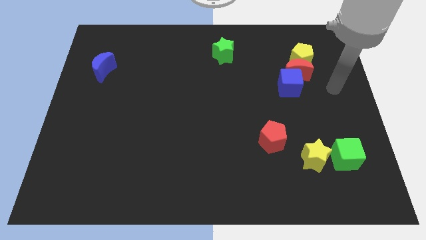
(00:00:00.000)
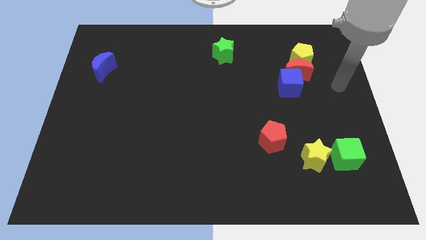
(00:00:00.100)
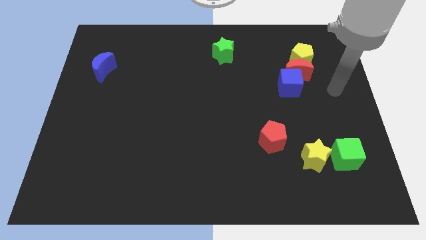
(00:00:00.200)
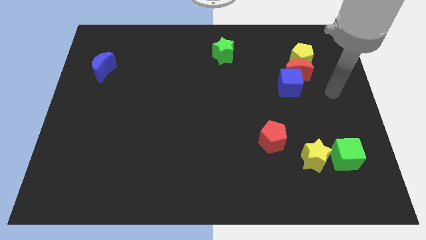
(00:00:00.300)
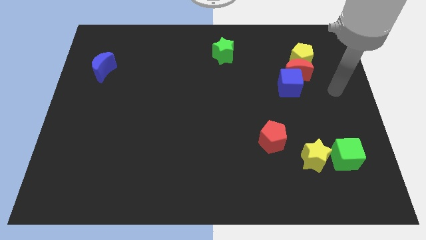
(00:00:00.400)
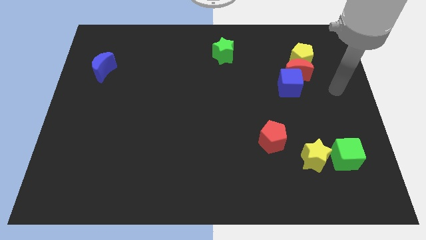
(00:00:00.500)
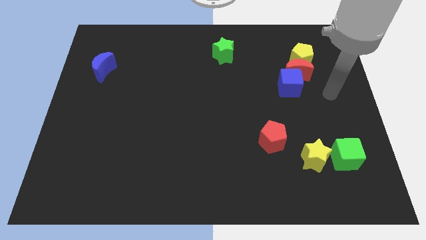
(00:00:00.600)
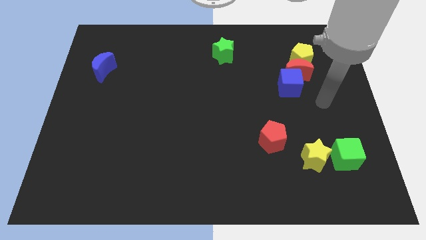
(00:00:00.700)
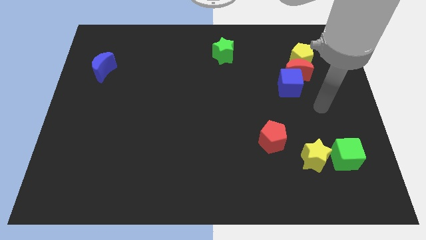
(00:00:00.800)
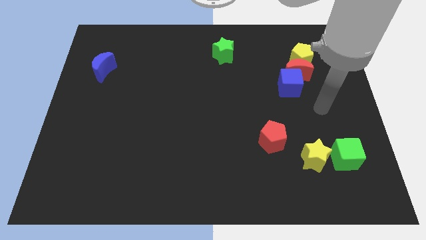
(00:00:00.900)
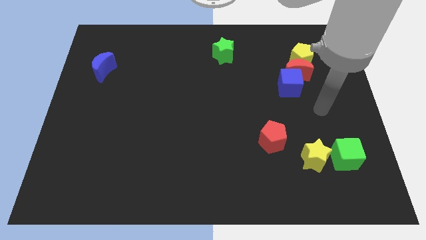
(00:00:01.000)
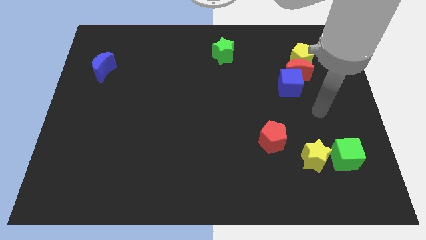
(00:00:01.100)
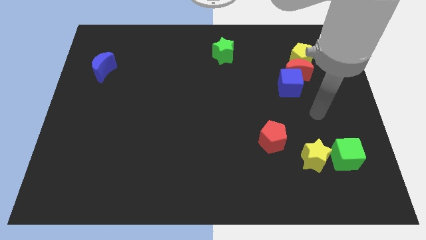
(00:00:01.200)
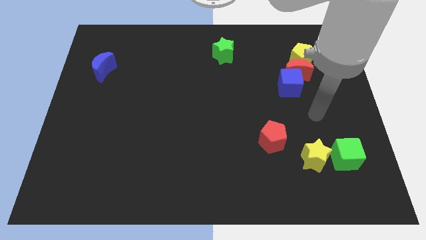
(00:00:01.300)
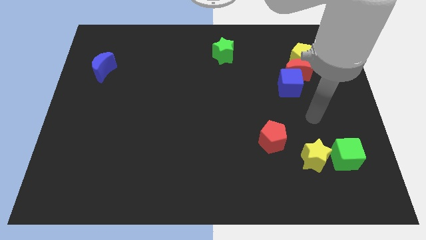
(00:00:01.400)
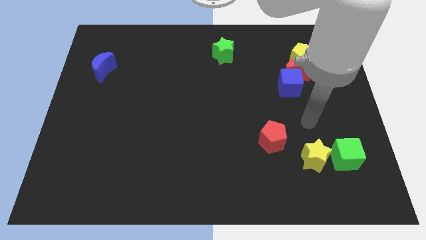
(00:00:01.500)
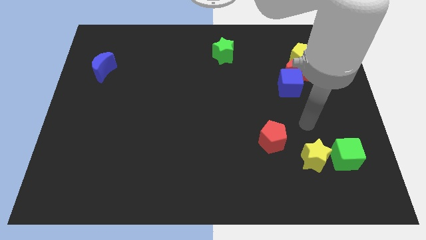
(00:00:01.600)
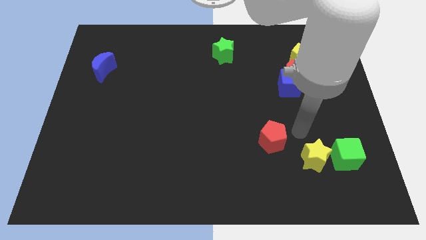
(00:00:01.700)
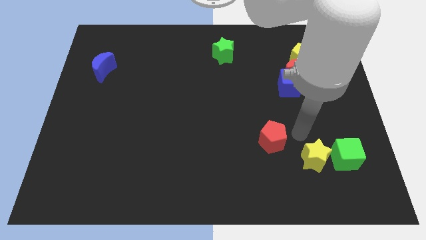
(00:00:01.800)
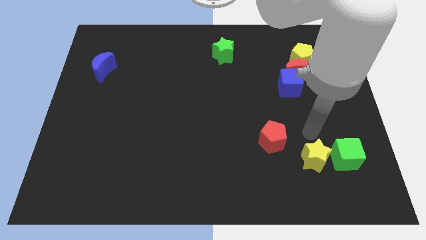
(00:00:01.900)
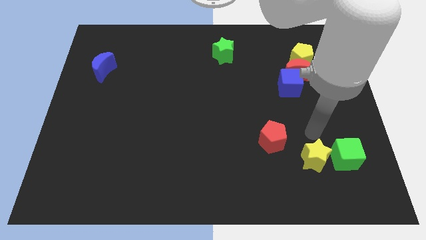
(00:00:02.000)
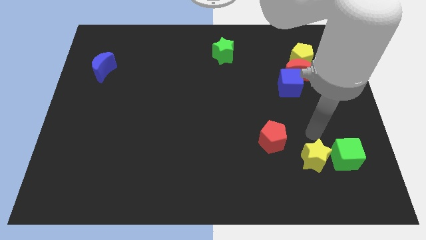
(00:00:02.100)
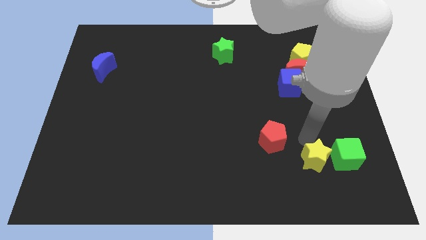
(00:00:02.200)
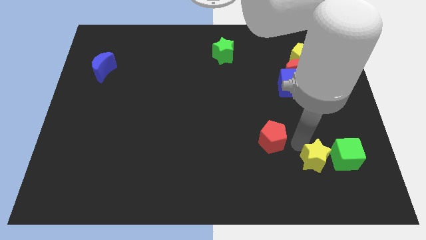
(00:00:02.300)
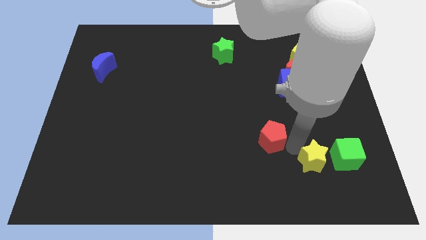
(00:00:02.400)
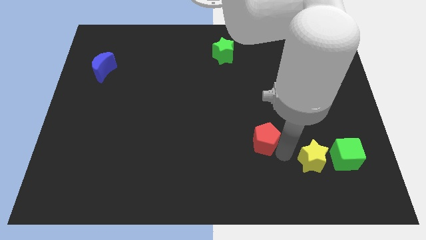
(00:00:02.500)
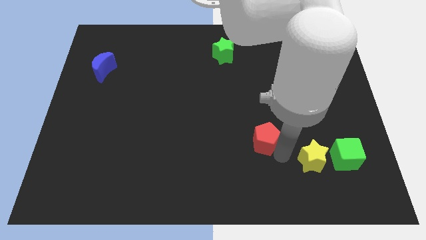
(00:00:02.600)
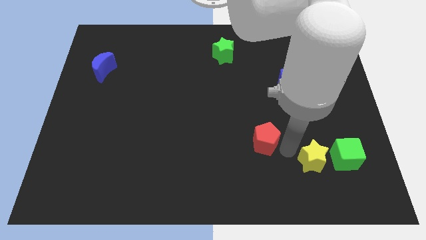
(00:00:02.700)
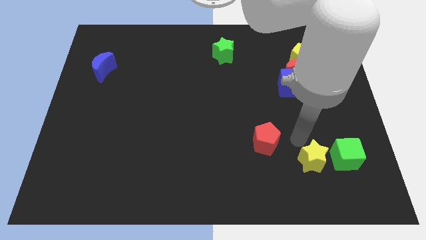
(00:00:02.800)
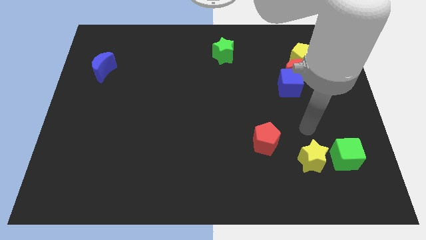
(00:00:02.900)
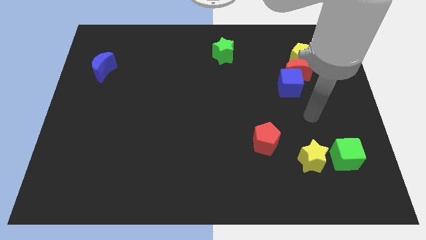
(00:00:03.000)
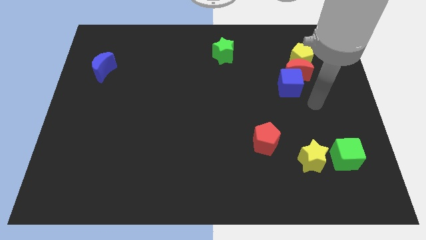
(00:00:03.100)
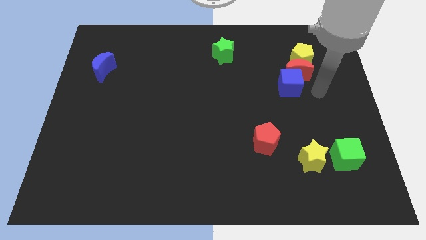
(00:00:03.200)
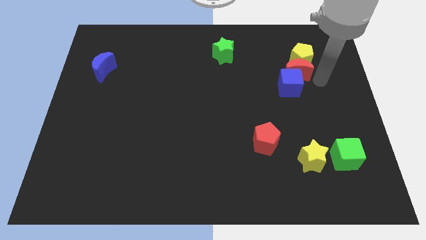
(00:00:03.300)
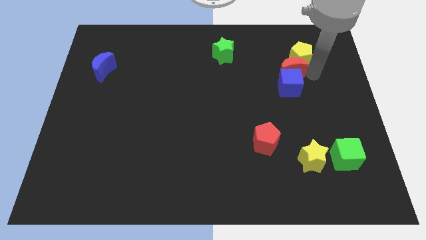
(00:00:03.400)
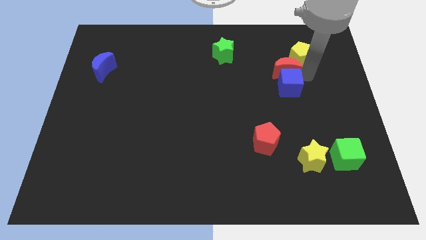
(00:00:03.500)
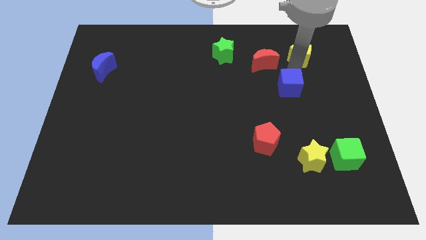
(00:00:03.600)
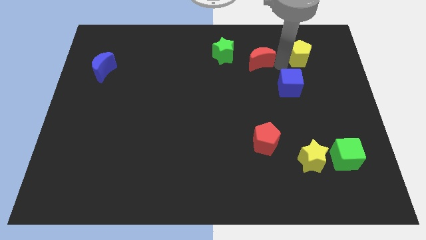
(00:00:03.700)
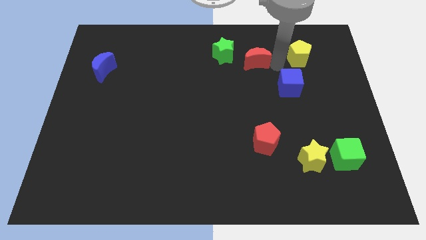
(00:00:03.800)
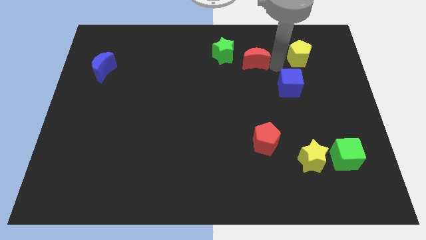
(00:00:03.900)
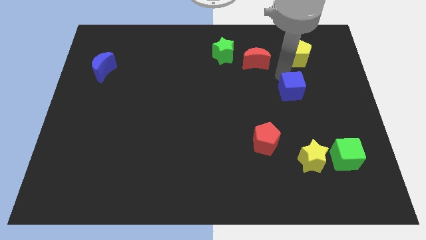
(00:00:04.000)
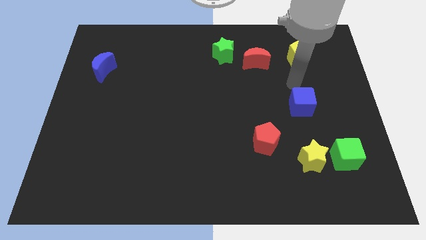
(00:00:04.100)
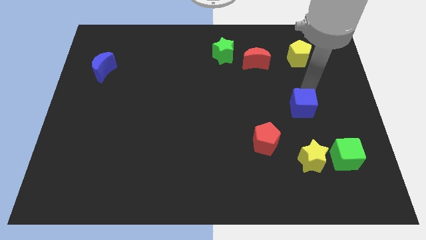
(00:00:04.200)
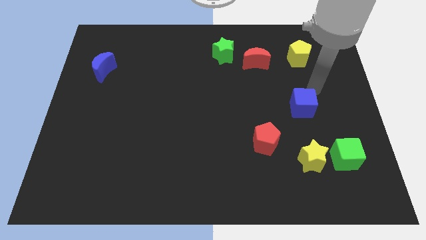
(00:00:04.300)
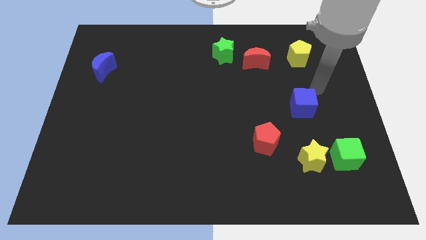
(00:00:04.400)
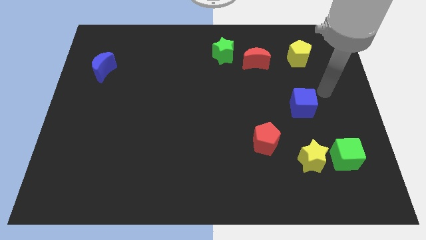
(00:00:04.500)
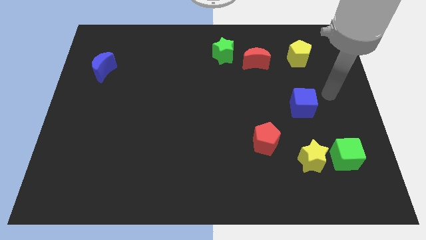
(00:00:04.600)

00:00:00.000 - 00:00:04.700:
adjust the yellow star red pentagon and blue cube to form a triangle

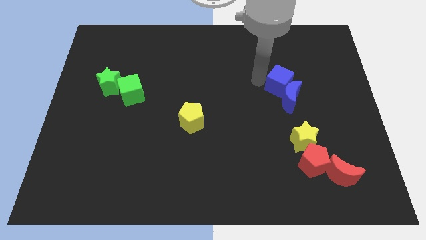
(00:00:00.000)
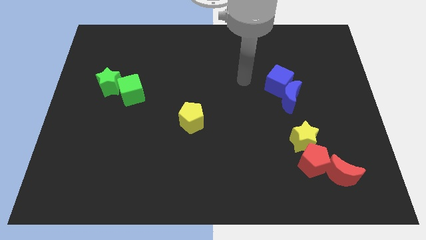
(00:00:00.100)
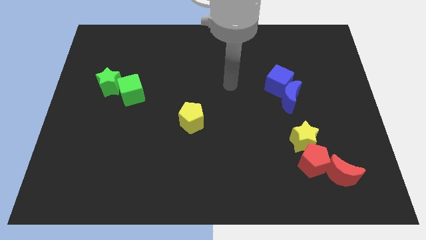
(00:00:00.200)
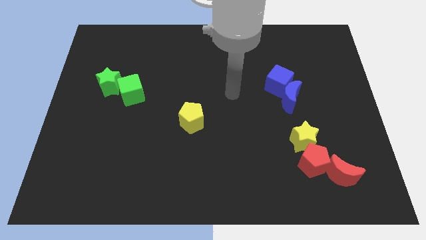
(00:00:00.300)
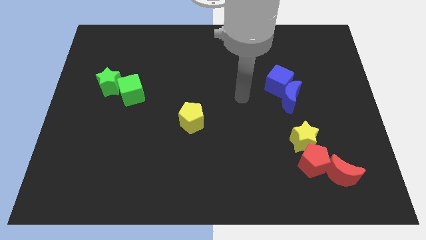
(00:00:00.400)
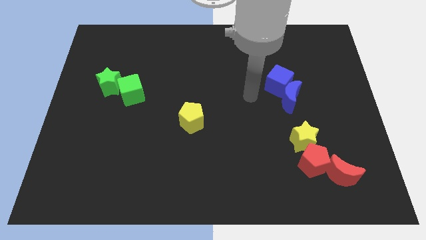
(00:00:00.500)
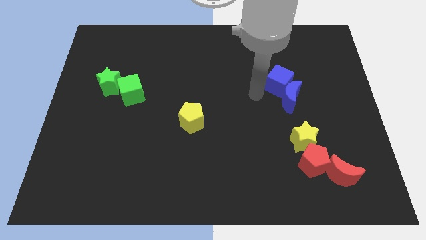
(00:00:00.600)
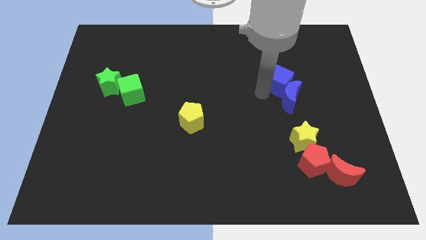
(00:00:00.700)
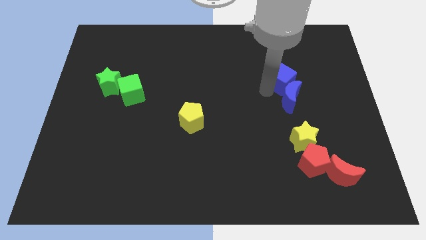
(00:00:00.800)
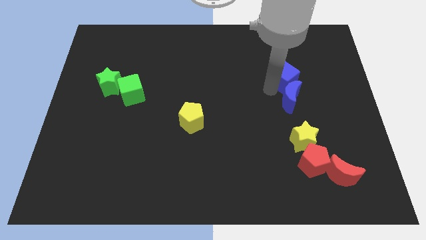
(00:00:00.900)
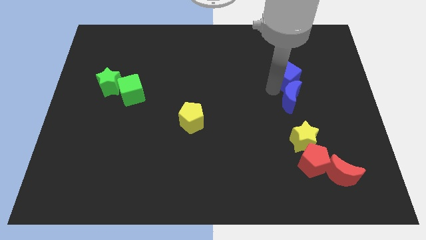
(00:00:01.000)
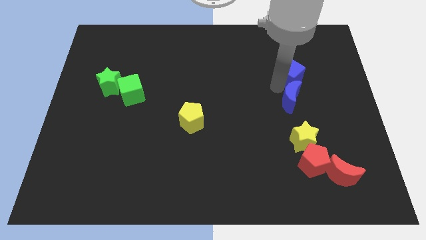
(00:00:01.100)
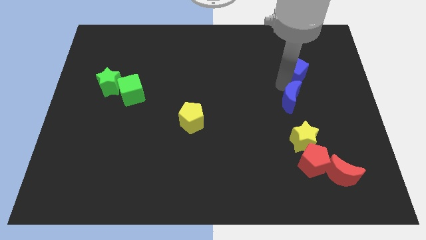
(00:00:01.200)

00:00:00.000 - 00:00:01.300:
push the blue cube to the top of the blue crescent

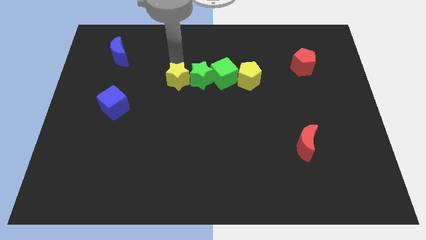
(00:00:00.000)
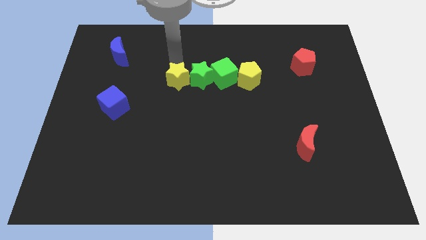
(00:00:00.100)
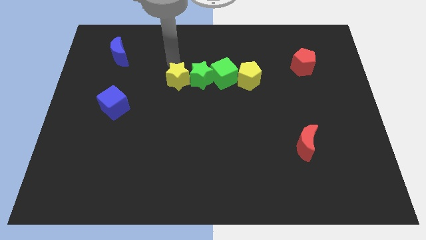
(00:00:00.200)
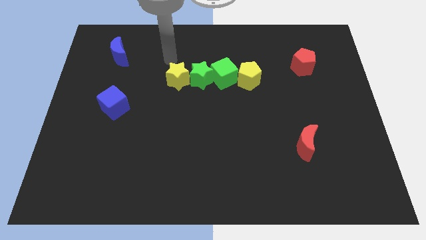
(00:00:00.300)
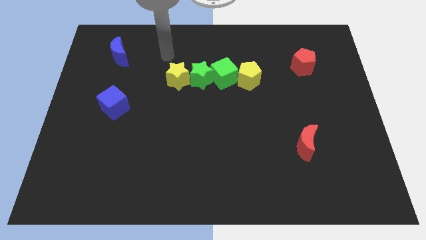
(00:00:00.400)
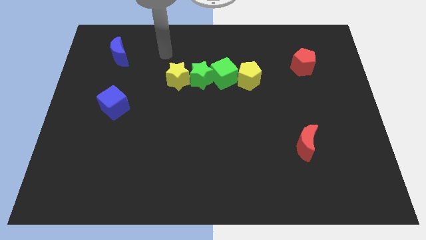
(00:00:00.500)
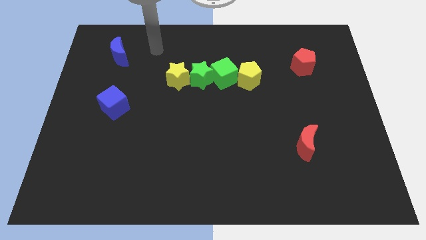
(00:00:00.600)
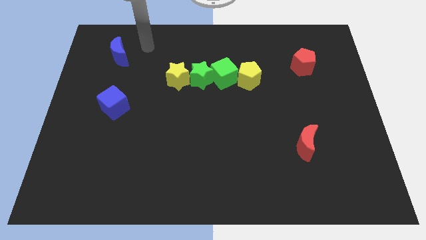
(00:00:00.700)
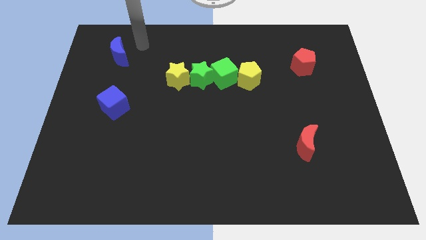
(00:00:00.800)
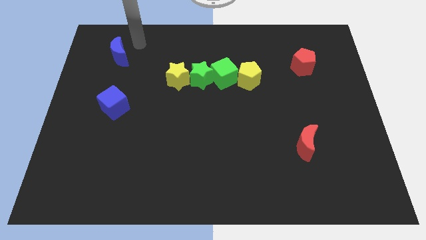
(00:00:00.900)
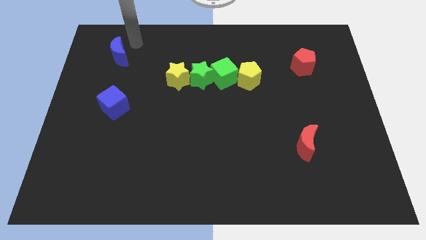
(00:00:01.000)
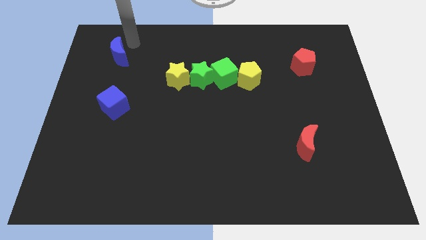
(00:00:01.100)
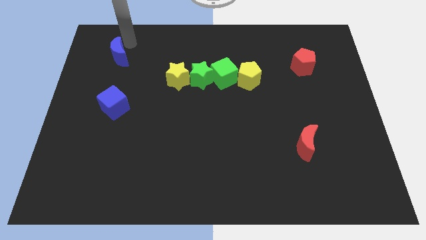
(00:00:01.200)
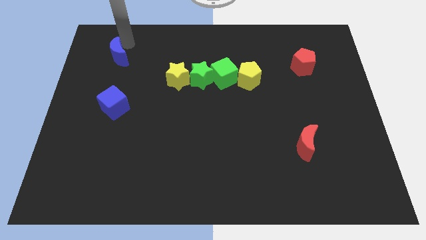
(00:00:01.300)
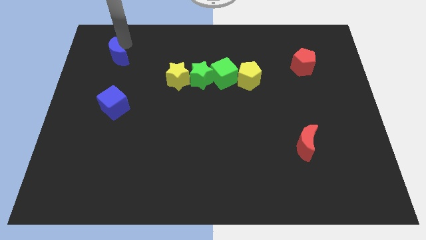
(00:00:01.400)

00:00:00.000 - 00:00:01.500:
move your arm to the top of the blue crescent

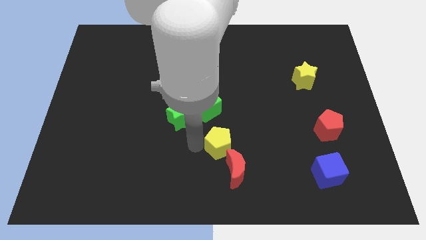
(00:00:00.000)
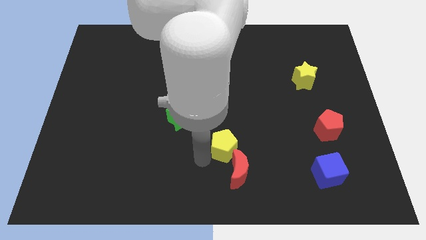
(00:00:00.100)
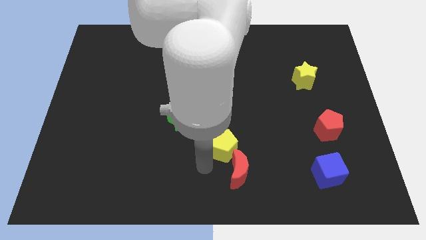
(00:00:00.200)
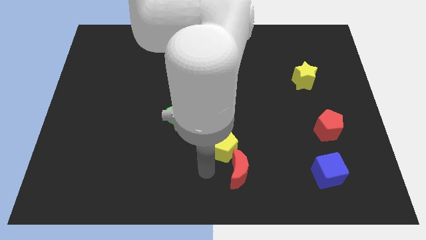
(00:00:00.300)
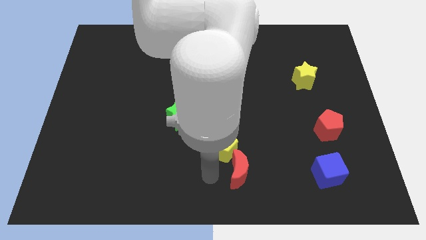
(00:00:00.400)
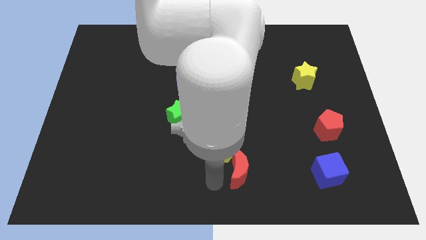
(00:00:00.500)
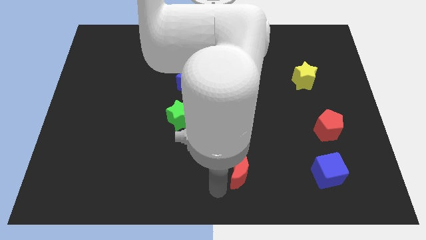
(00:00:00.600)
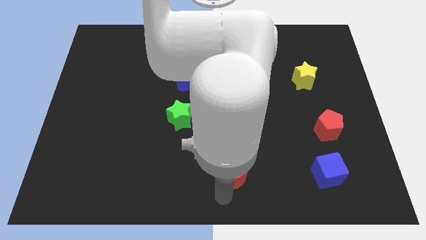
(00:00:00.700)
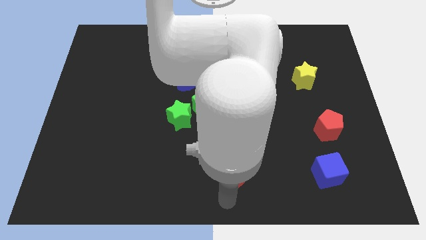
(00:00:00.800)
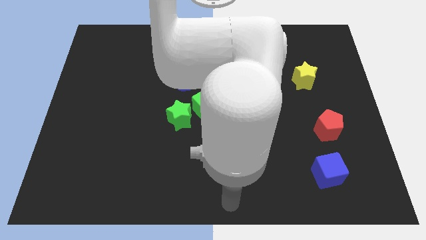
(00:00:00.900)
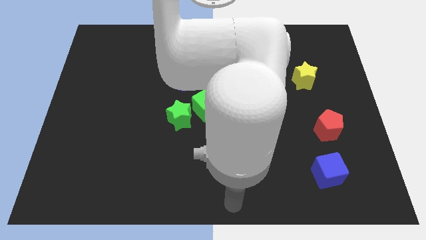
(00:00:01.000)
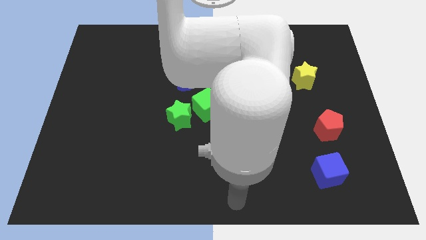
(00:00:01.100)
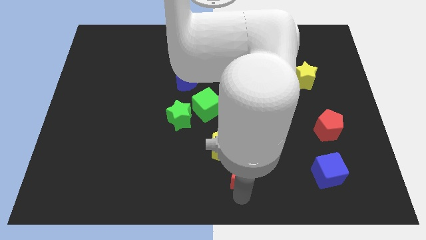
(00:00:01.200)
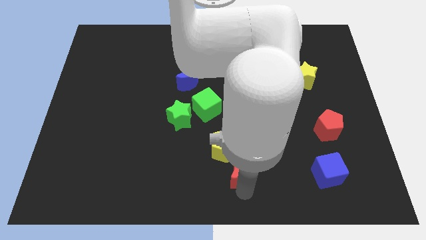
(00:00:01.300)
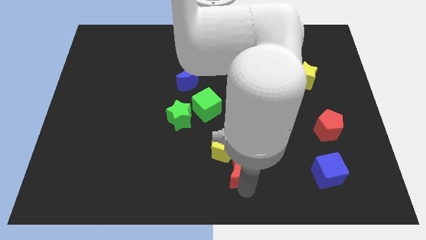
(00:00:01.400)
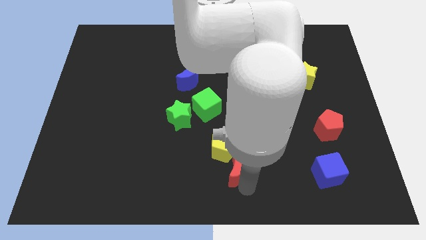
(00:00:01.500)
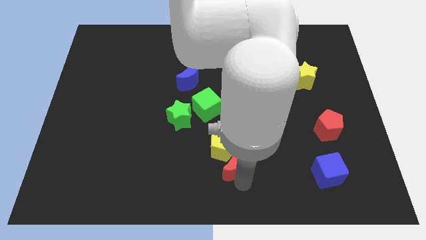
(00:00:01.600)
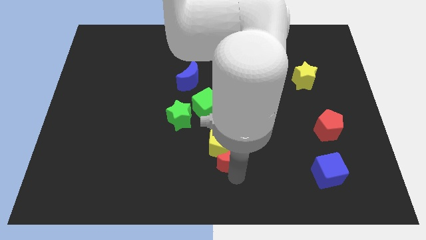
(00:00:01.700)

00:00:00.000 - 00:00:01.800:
push the red moon into the yellow pentagon
